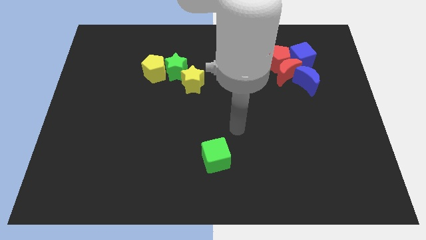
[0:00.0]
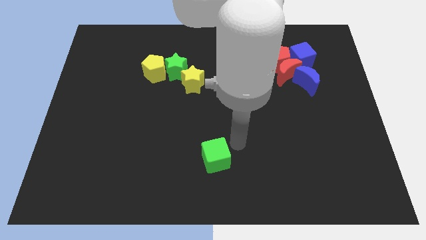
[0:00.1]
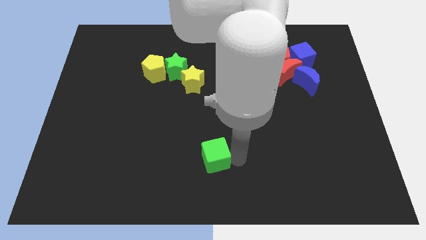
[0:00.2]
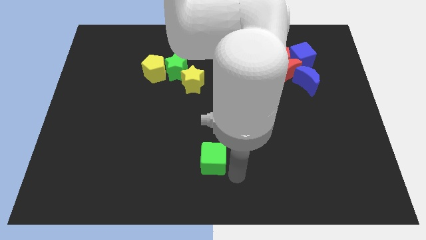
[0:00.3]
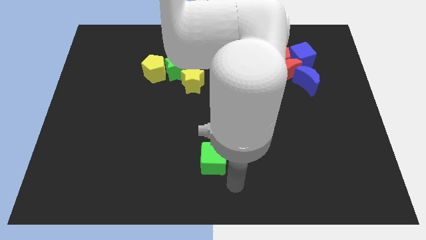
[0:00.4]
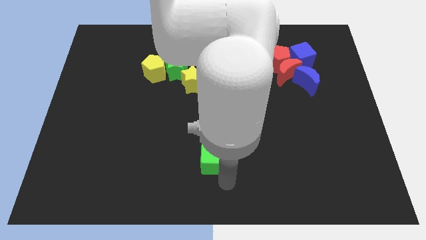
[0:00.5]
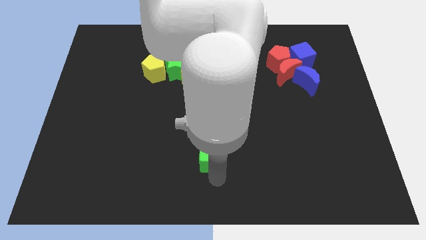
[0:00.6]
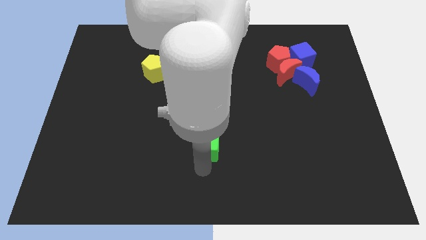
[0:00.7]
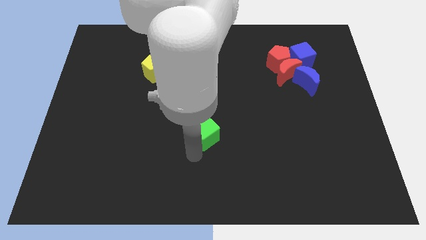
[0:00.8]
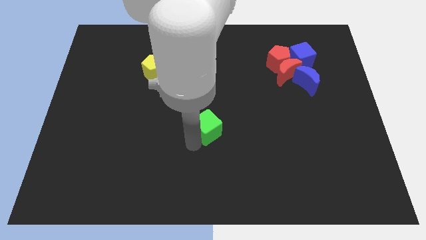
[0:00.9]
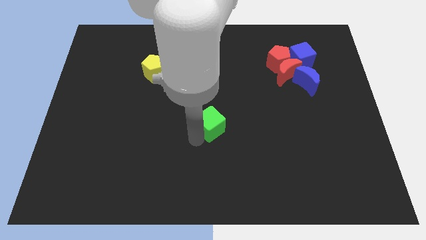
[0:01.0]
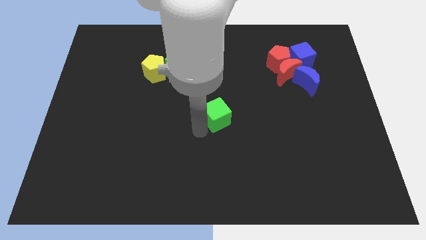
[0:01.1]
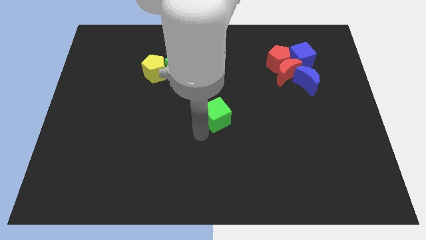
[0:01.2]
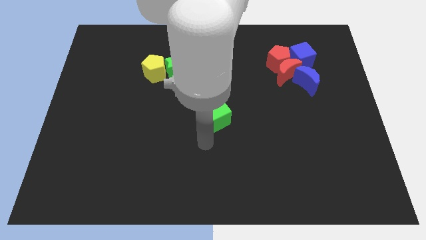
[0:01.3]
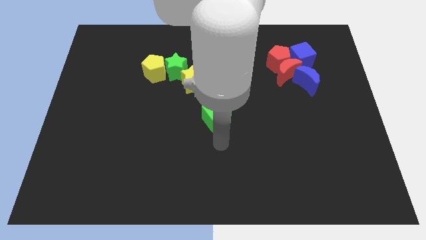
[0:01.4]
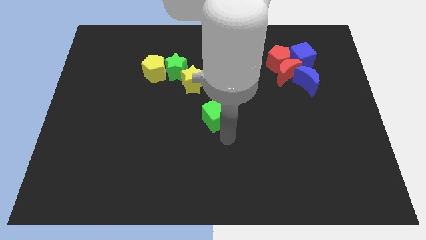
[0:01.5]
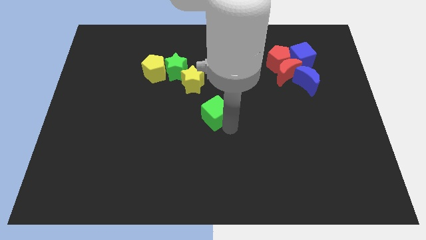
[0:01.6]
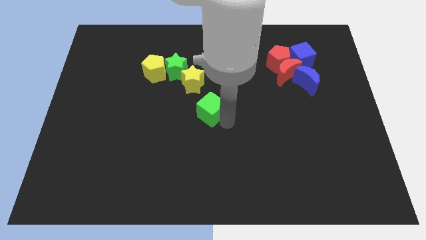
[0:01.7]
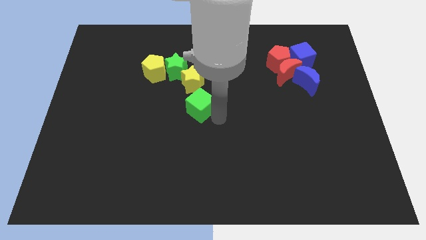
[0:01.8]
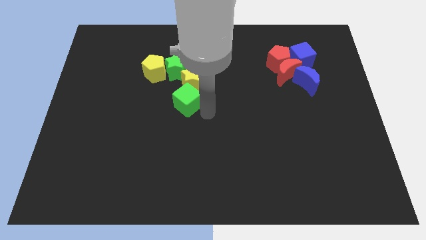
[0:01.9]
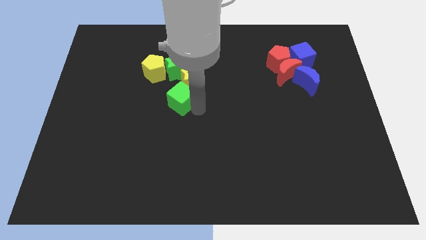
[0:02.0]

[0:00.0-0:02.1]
push green cube below yellow star

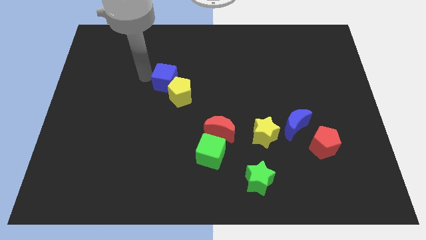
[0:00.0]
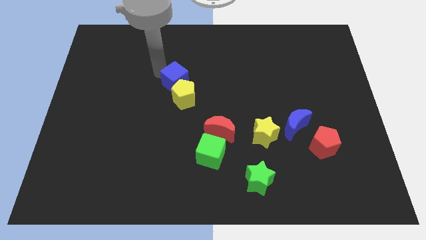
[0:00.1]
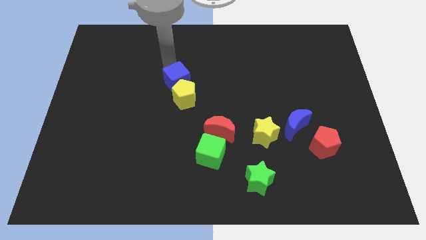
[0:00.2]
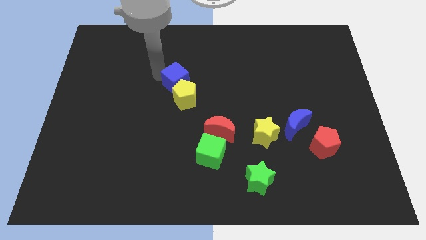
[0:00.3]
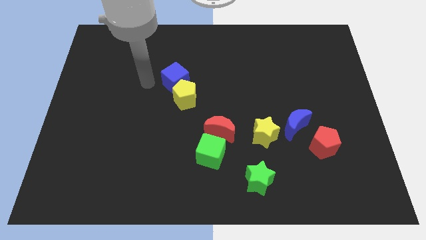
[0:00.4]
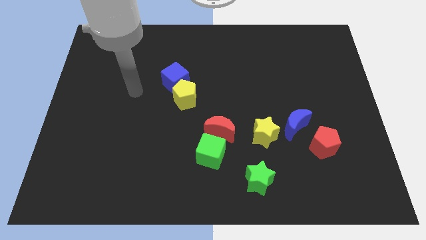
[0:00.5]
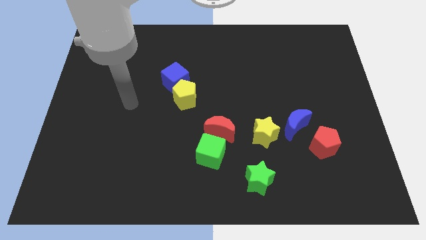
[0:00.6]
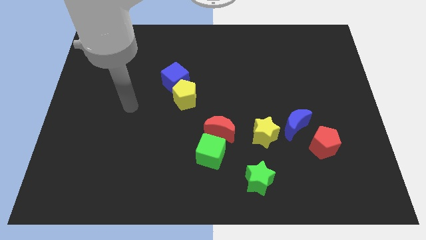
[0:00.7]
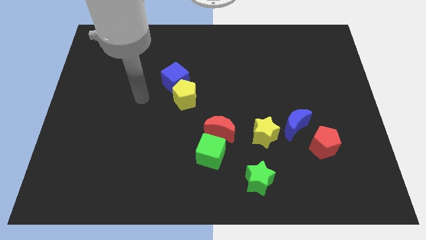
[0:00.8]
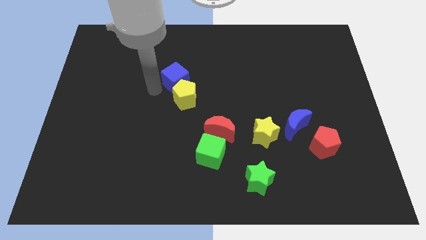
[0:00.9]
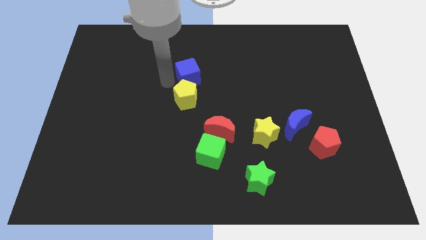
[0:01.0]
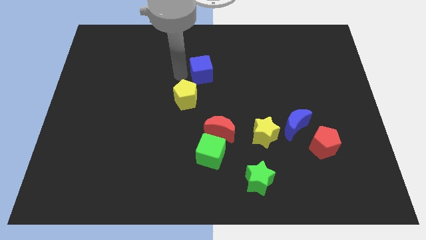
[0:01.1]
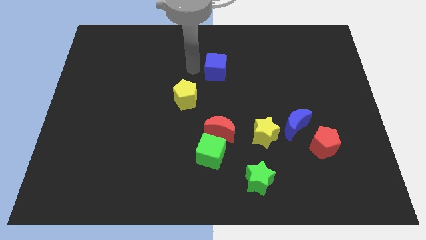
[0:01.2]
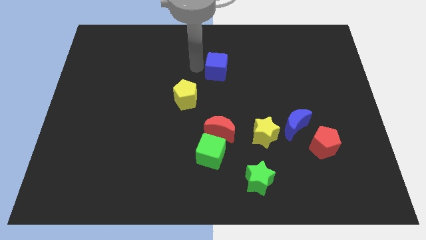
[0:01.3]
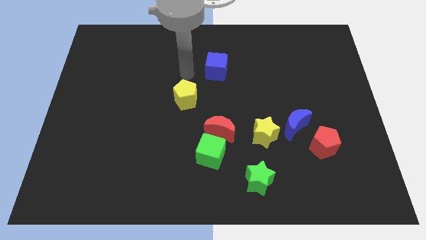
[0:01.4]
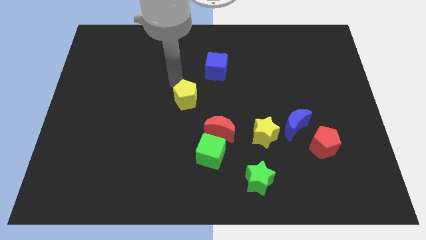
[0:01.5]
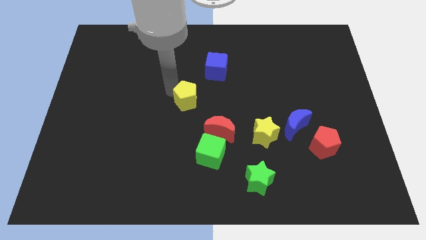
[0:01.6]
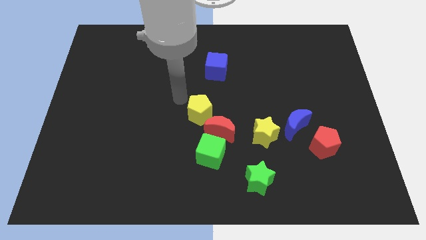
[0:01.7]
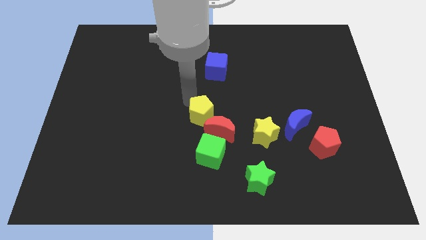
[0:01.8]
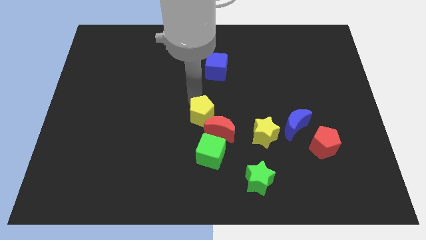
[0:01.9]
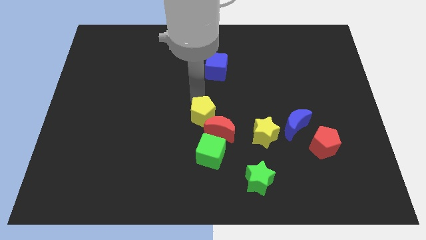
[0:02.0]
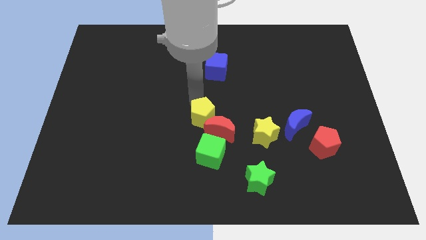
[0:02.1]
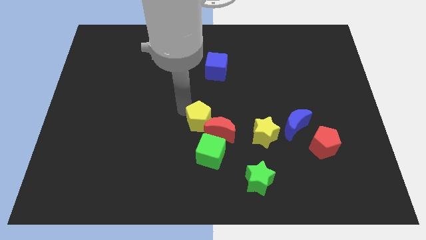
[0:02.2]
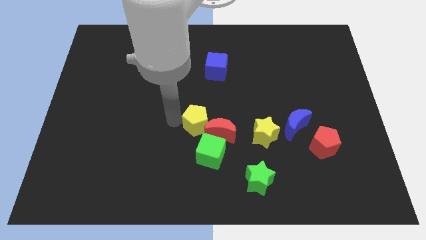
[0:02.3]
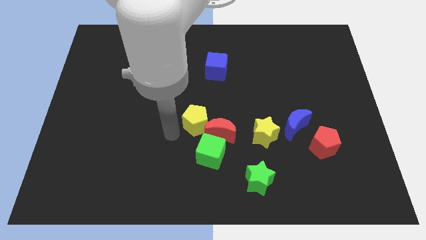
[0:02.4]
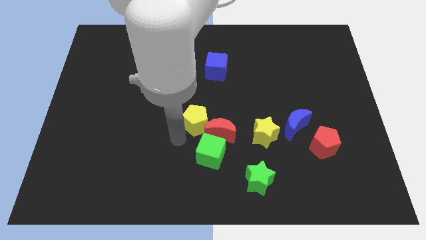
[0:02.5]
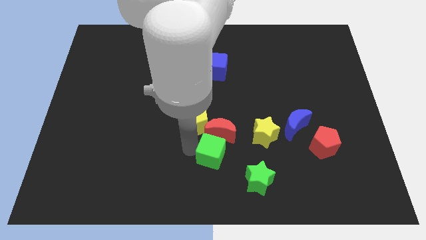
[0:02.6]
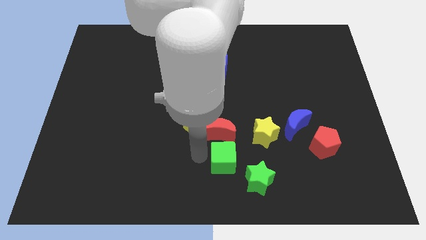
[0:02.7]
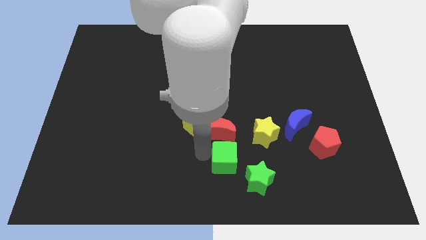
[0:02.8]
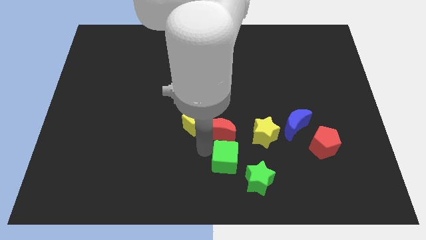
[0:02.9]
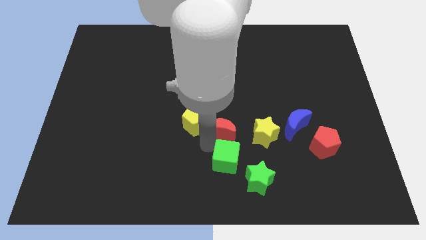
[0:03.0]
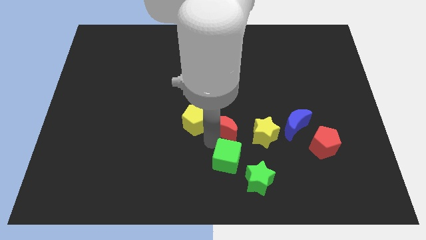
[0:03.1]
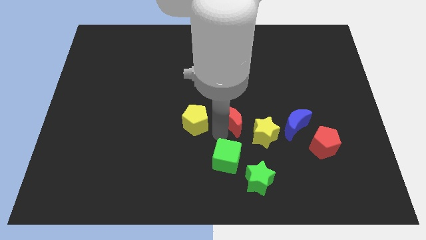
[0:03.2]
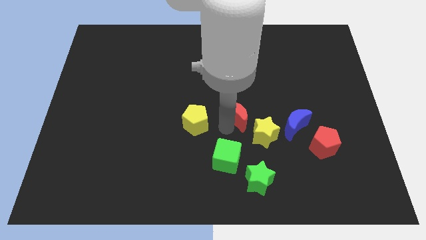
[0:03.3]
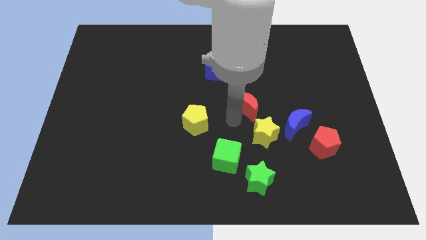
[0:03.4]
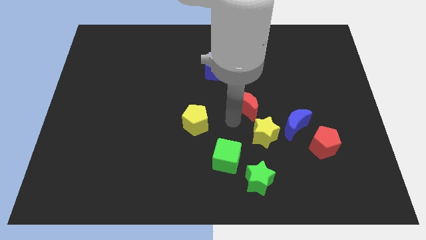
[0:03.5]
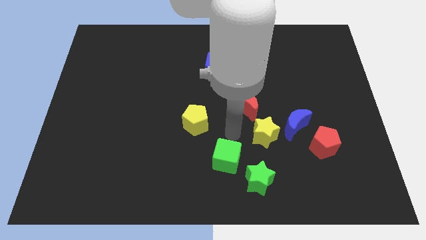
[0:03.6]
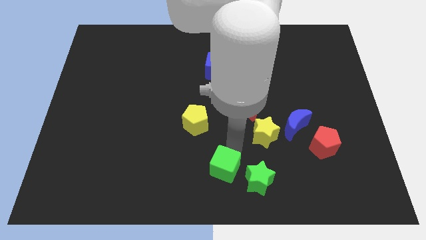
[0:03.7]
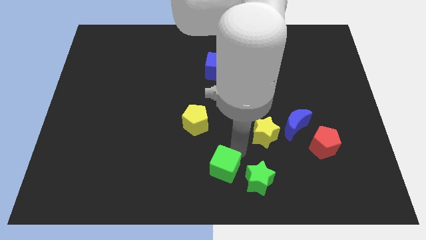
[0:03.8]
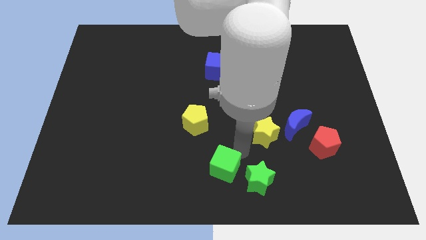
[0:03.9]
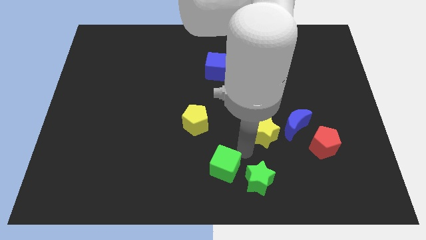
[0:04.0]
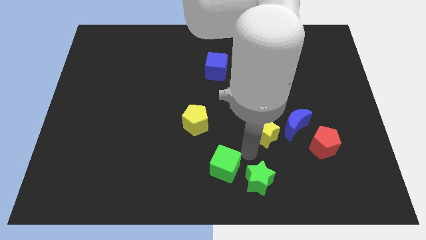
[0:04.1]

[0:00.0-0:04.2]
move the red moon slightly upwards

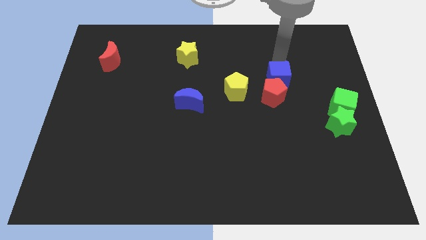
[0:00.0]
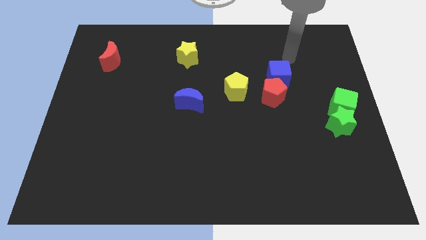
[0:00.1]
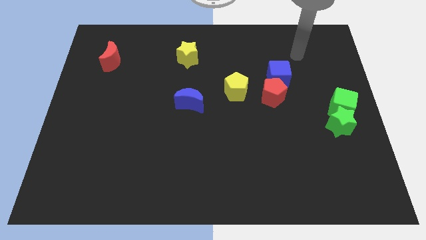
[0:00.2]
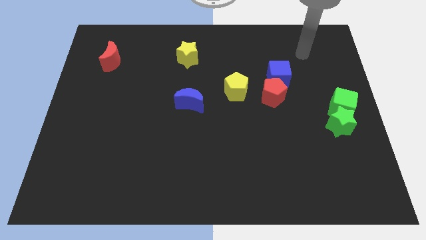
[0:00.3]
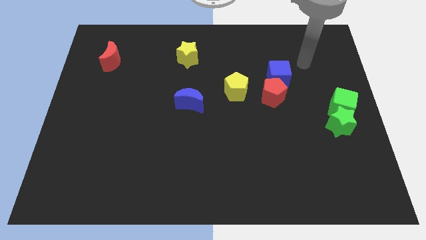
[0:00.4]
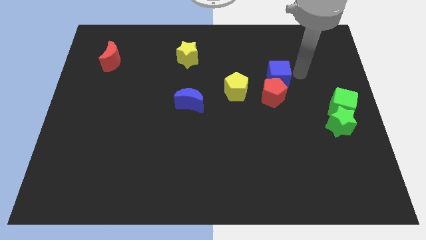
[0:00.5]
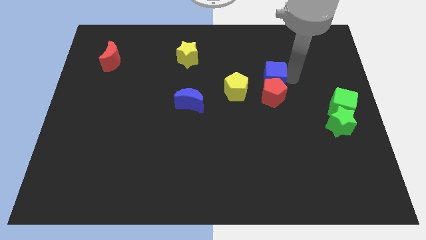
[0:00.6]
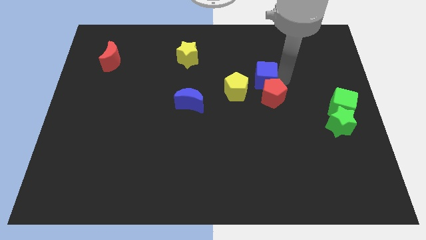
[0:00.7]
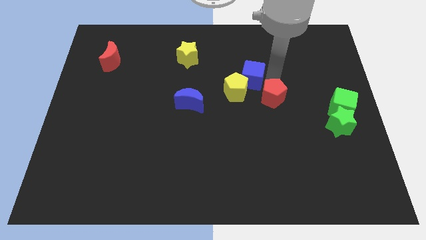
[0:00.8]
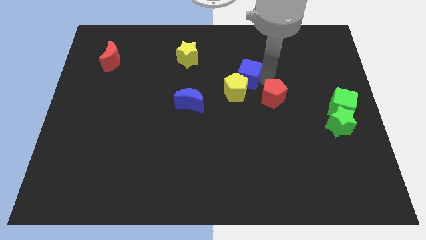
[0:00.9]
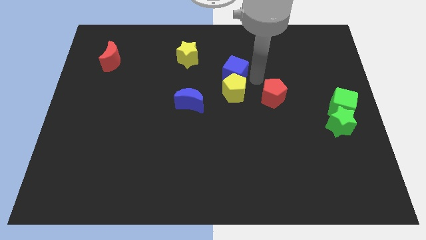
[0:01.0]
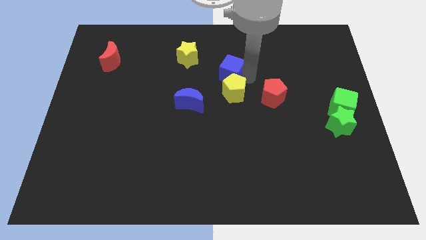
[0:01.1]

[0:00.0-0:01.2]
move the blue cube to the top side of the yellow pentagon

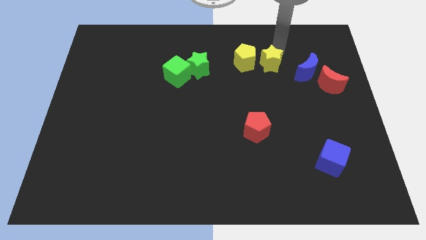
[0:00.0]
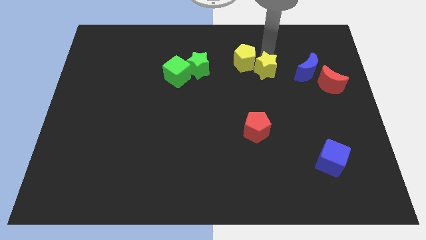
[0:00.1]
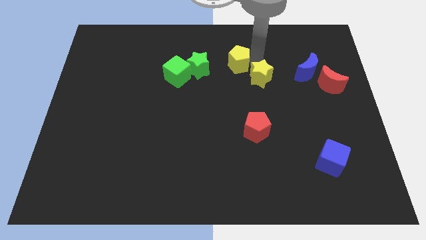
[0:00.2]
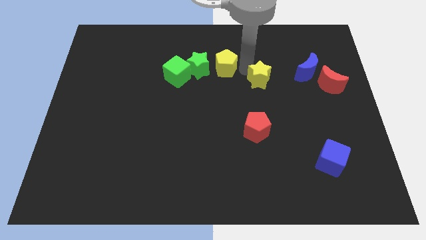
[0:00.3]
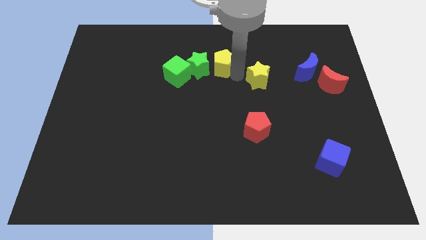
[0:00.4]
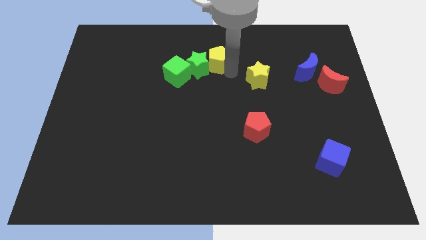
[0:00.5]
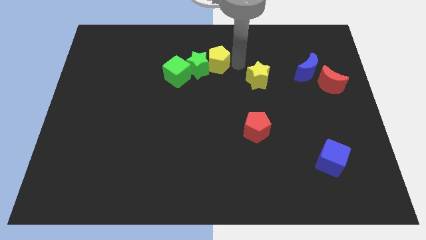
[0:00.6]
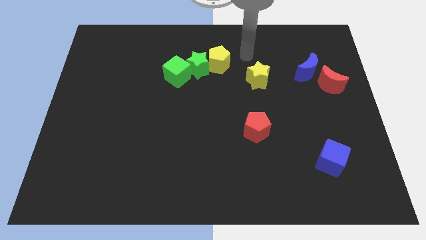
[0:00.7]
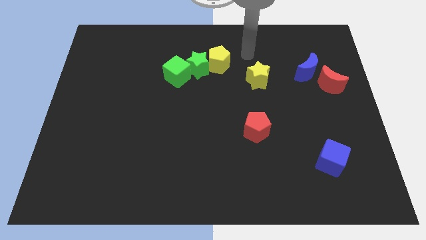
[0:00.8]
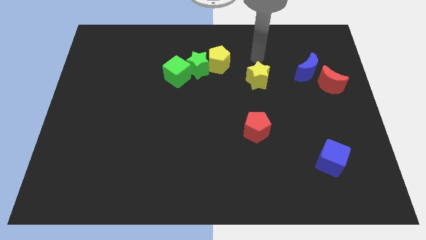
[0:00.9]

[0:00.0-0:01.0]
push yellow pentagon close right to the green star

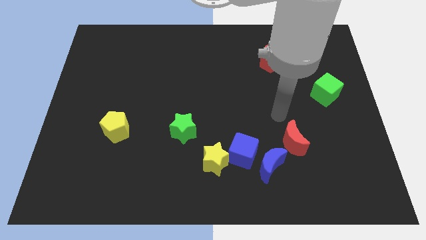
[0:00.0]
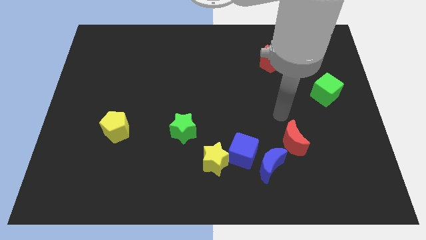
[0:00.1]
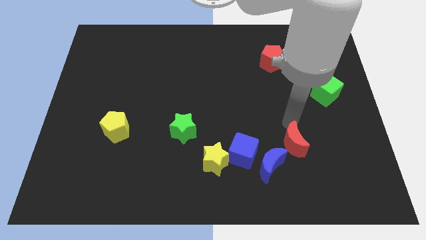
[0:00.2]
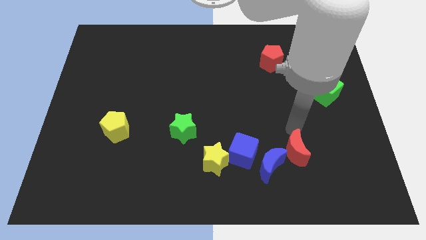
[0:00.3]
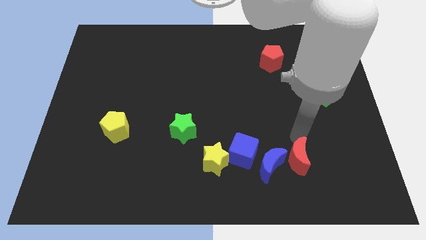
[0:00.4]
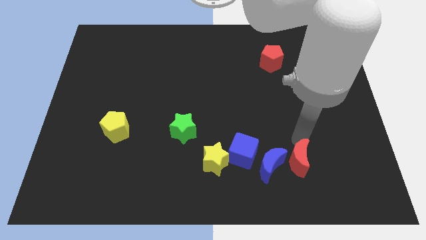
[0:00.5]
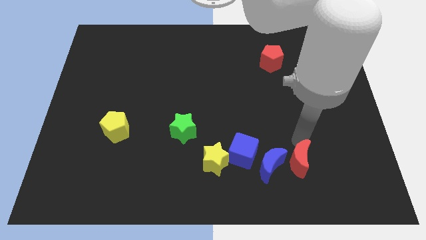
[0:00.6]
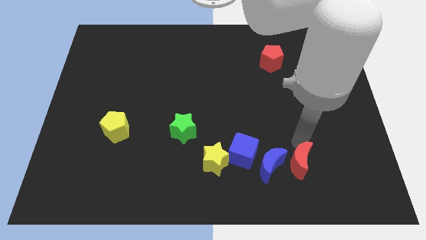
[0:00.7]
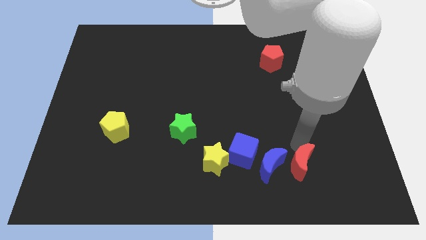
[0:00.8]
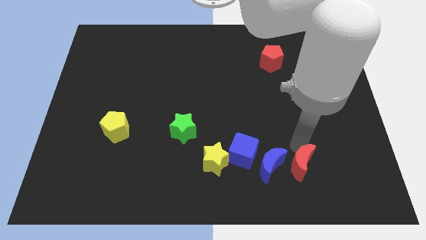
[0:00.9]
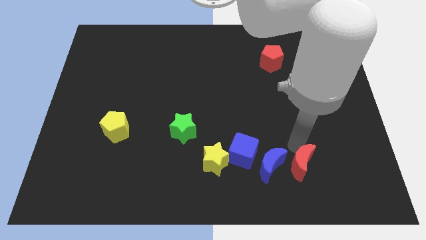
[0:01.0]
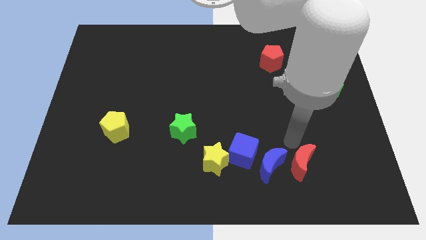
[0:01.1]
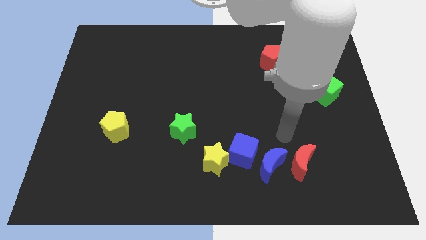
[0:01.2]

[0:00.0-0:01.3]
place the red crescent right to the blue crescent
